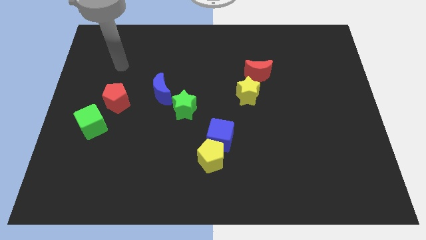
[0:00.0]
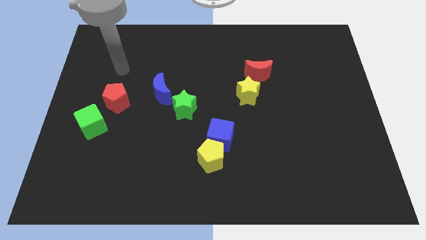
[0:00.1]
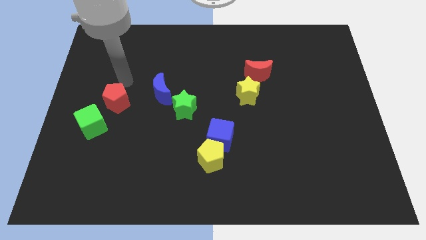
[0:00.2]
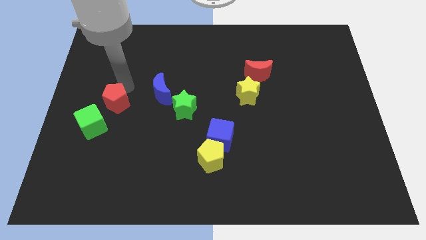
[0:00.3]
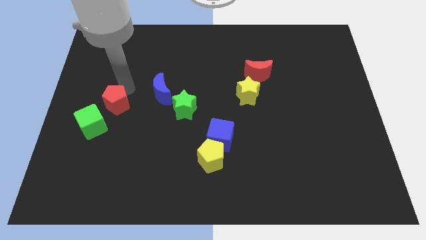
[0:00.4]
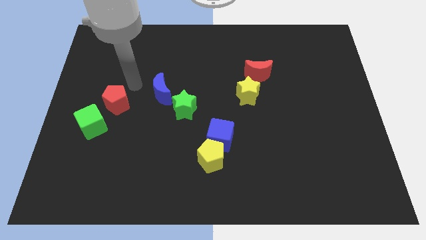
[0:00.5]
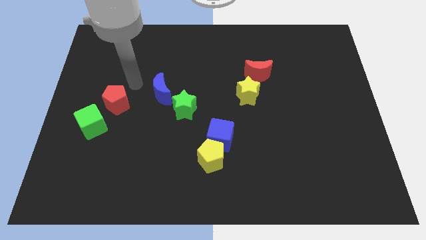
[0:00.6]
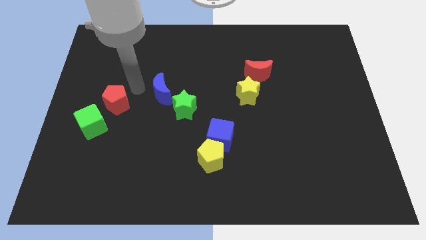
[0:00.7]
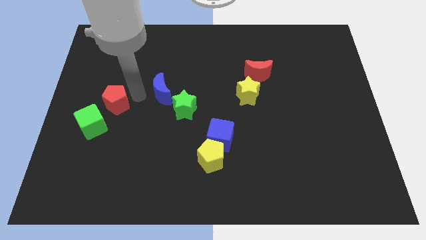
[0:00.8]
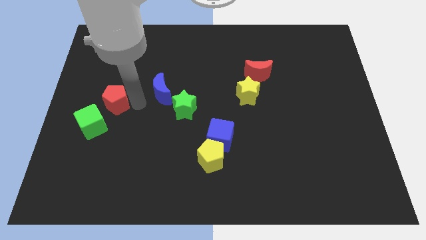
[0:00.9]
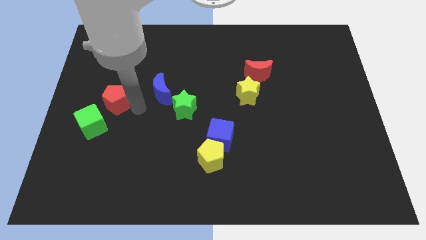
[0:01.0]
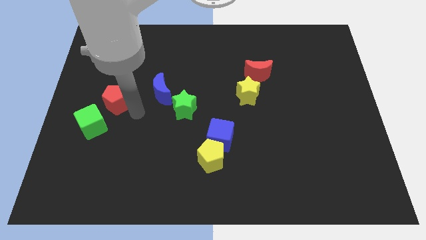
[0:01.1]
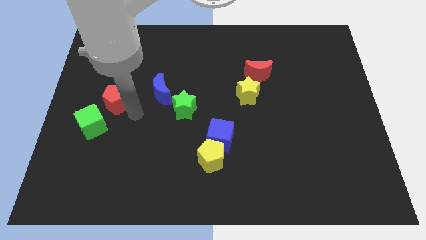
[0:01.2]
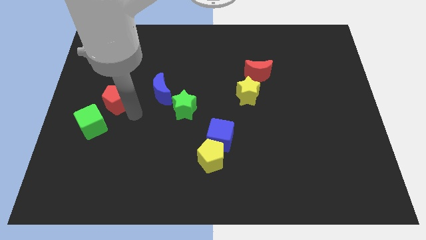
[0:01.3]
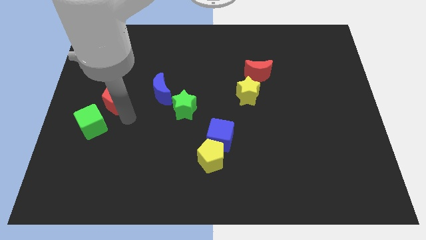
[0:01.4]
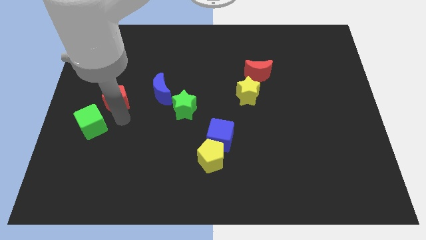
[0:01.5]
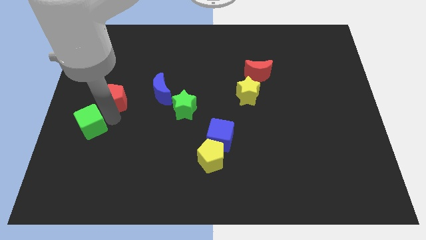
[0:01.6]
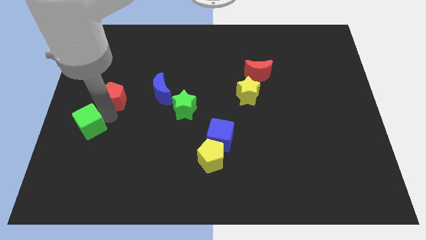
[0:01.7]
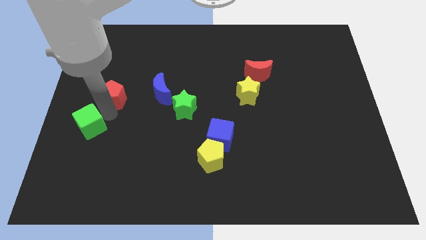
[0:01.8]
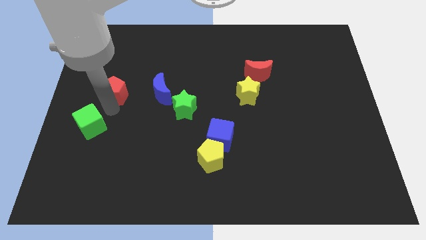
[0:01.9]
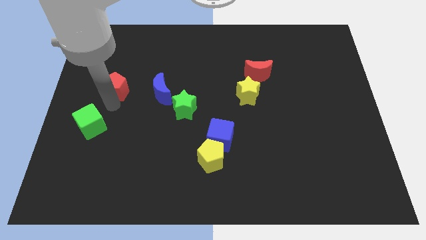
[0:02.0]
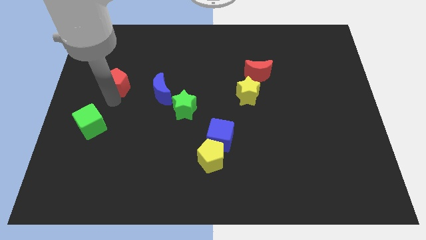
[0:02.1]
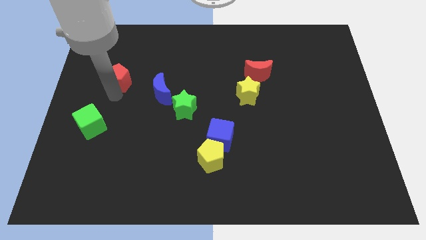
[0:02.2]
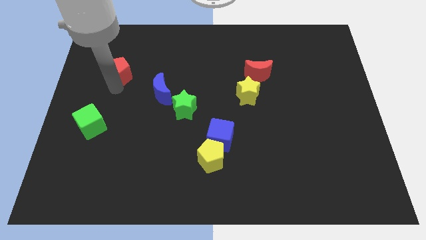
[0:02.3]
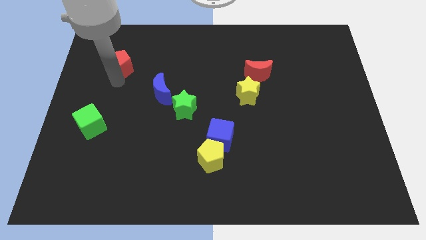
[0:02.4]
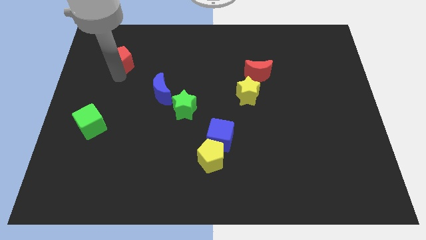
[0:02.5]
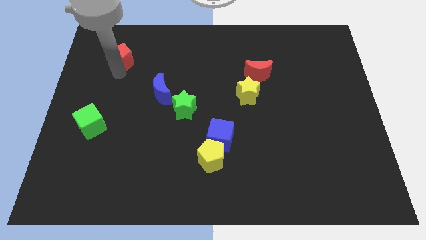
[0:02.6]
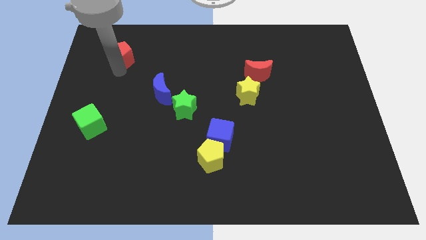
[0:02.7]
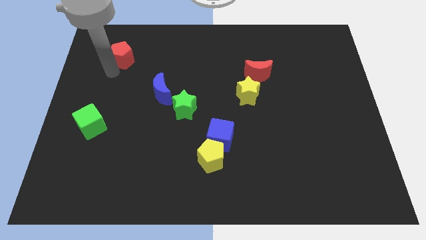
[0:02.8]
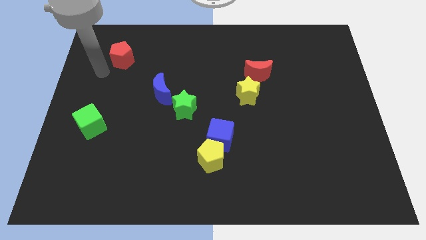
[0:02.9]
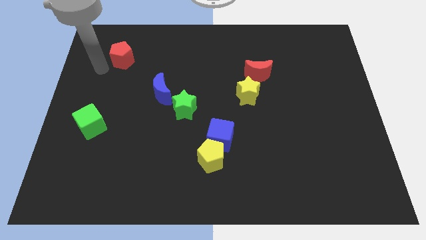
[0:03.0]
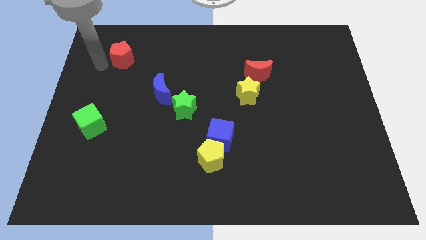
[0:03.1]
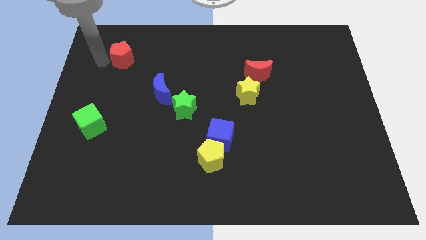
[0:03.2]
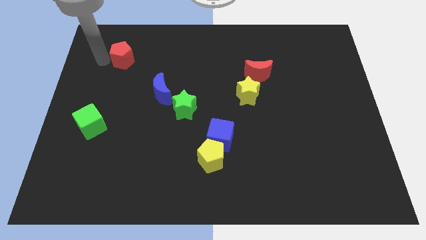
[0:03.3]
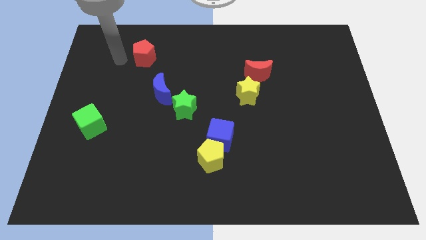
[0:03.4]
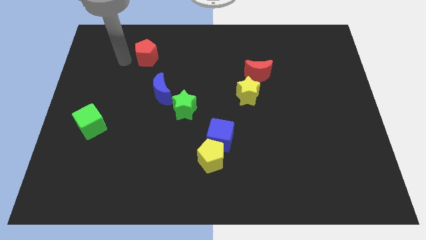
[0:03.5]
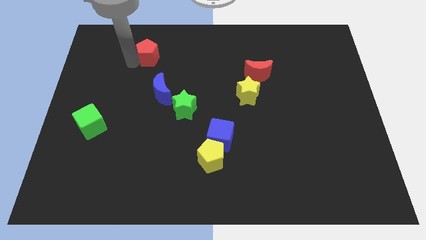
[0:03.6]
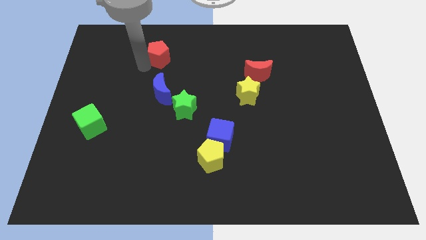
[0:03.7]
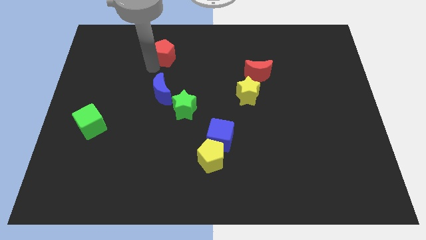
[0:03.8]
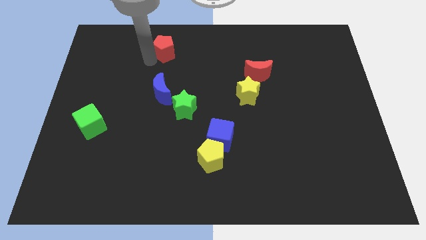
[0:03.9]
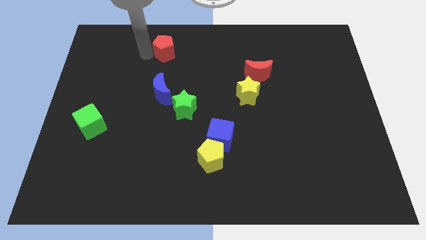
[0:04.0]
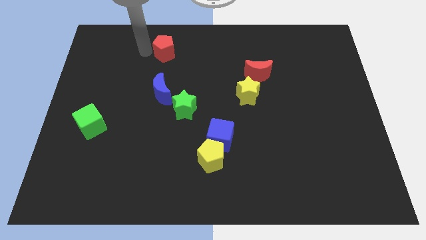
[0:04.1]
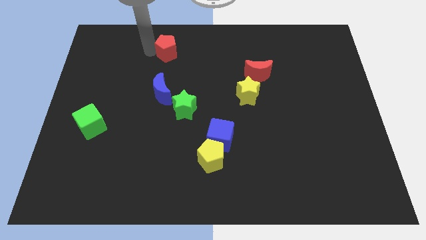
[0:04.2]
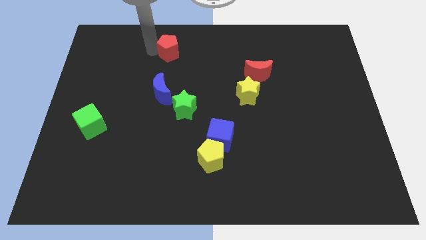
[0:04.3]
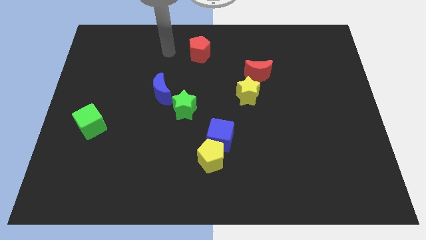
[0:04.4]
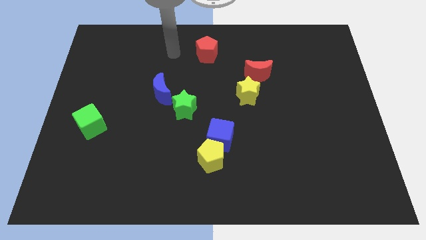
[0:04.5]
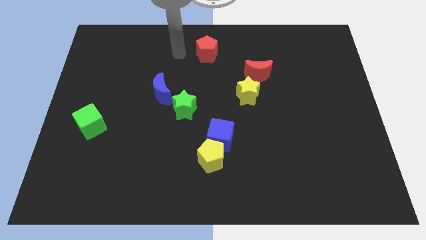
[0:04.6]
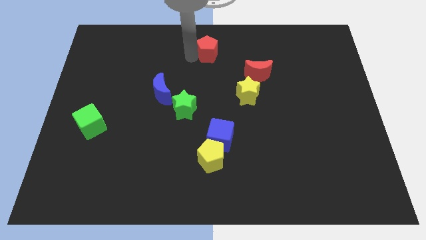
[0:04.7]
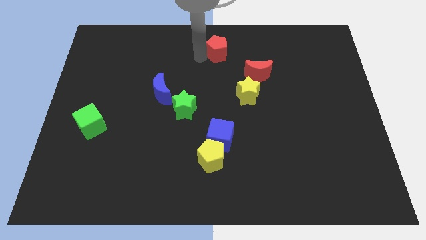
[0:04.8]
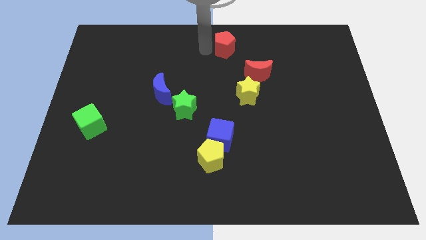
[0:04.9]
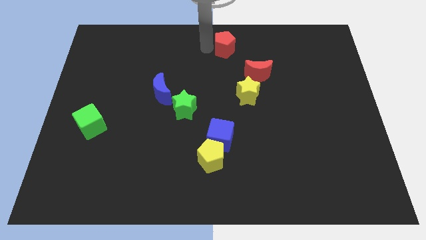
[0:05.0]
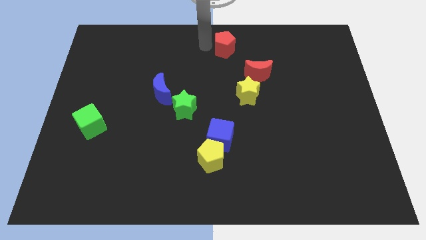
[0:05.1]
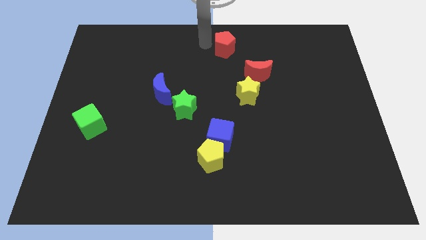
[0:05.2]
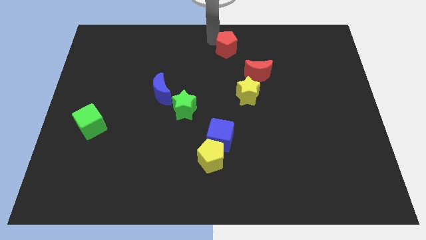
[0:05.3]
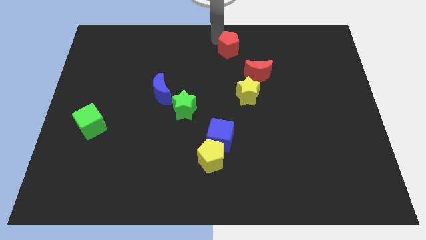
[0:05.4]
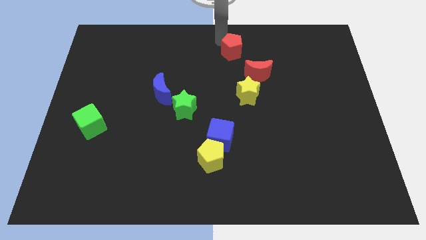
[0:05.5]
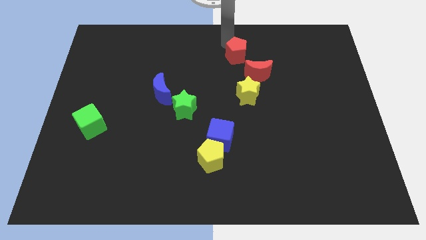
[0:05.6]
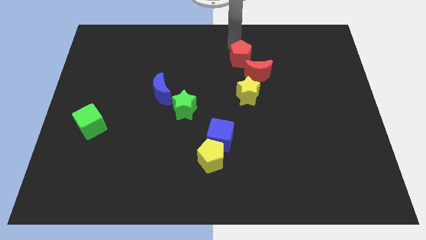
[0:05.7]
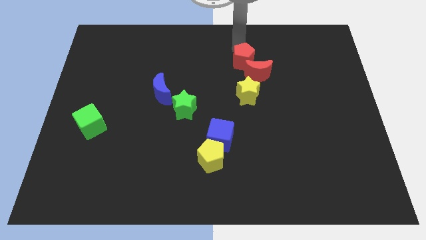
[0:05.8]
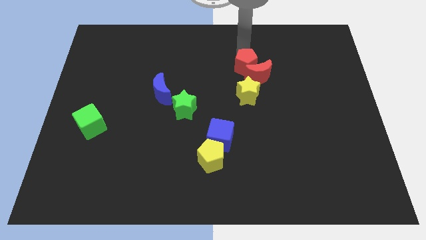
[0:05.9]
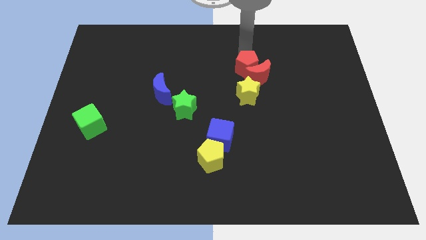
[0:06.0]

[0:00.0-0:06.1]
put the red pentagon next to the red moon

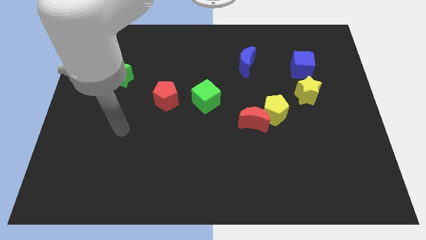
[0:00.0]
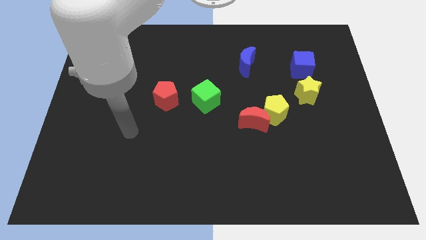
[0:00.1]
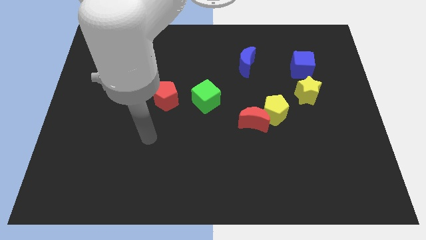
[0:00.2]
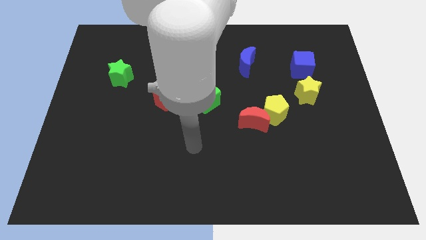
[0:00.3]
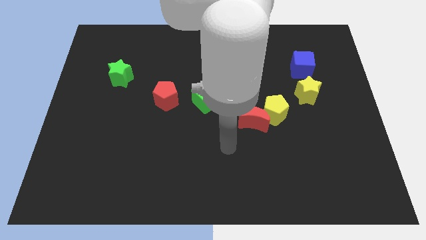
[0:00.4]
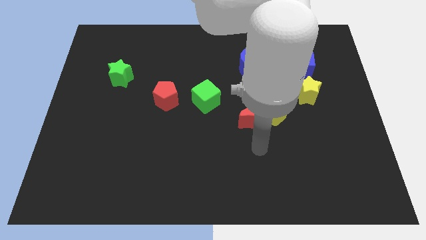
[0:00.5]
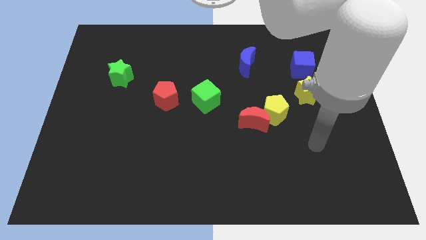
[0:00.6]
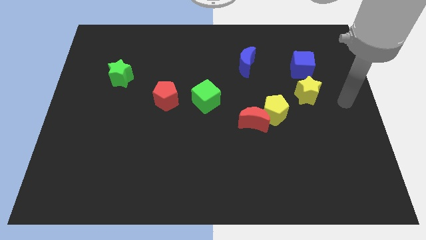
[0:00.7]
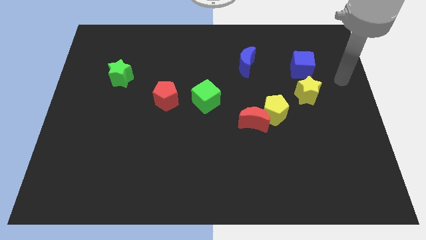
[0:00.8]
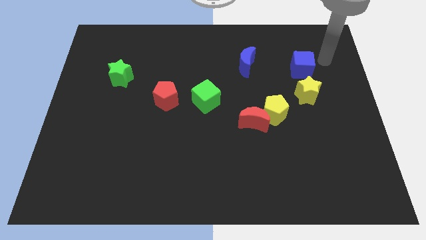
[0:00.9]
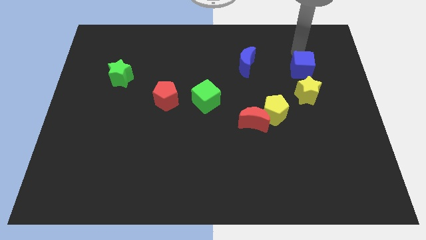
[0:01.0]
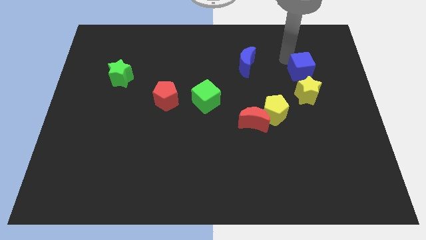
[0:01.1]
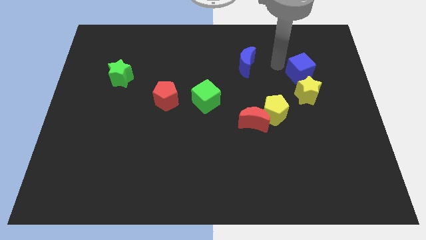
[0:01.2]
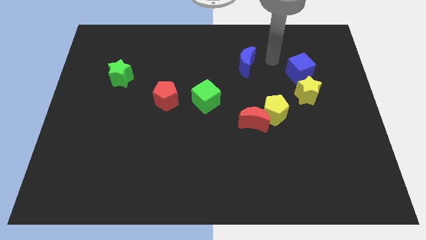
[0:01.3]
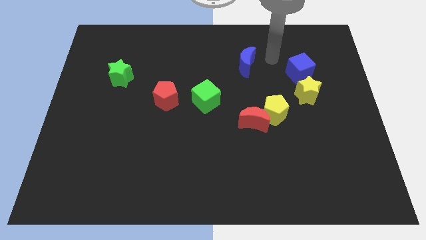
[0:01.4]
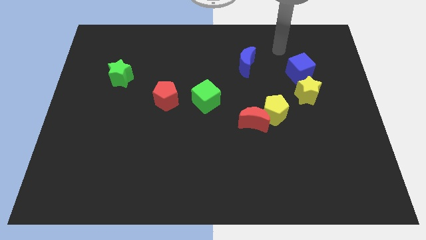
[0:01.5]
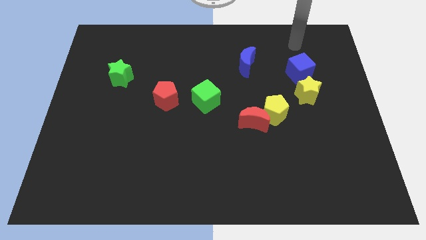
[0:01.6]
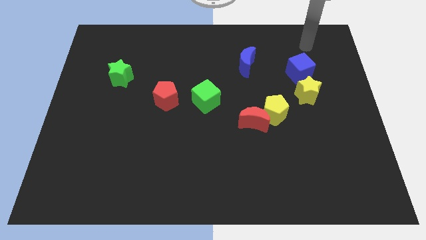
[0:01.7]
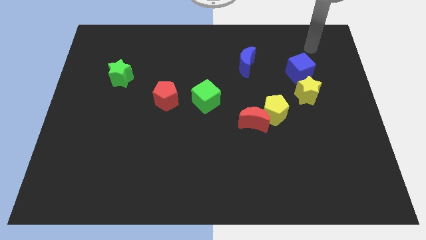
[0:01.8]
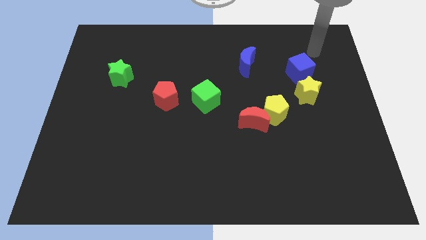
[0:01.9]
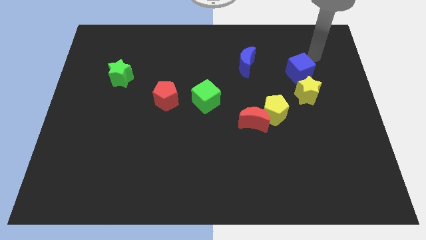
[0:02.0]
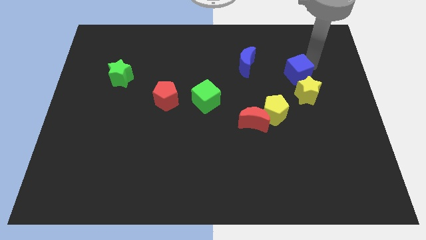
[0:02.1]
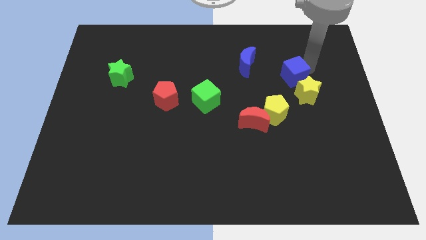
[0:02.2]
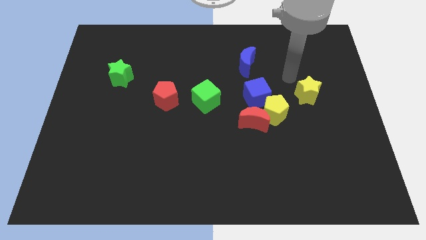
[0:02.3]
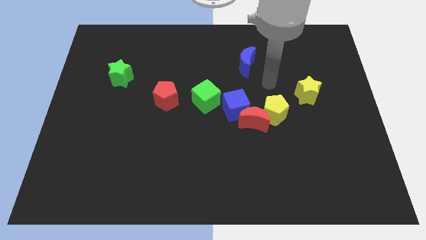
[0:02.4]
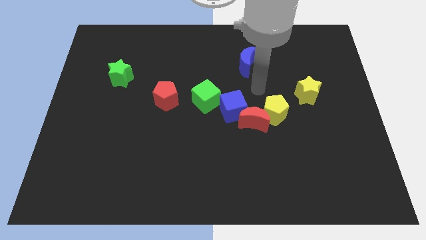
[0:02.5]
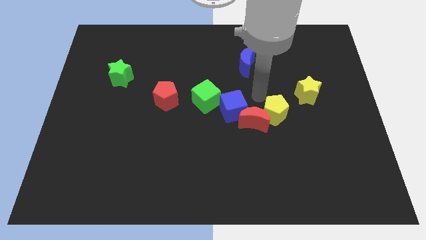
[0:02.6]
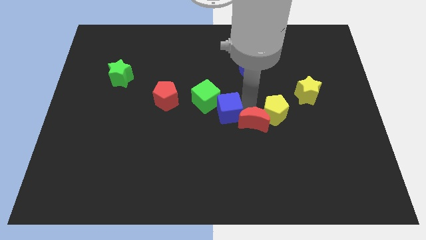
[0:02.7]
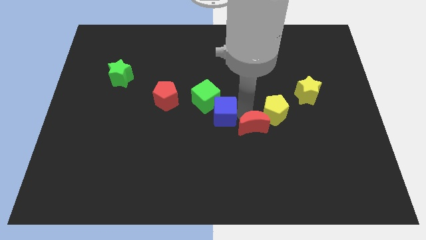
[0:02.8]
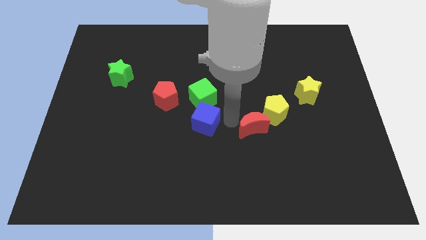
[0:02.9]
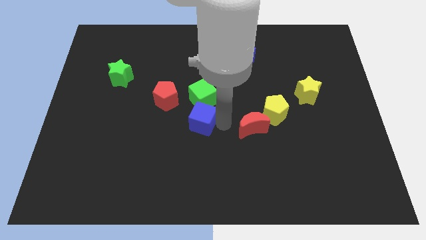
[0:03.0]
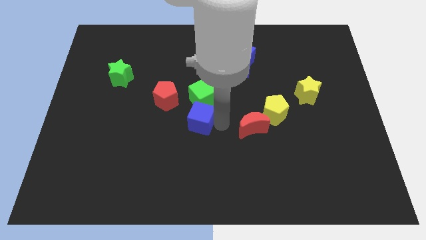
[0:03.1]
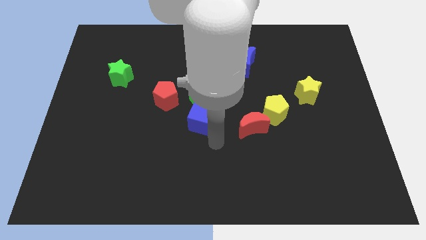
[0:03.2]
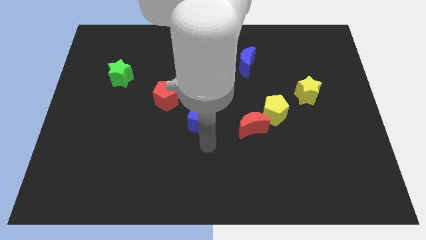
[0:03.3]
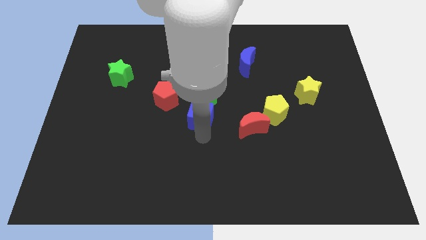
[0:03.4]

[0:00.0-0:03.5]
slide the blue cube to the green cube
